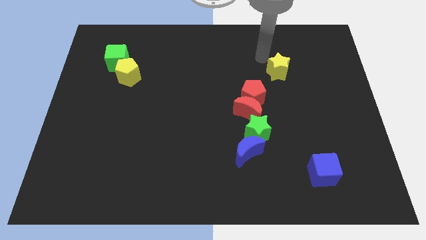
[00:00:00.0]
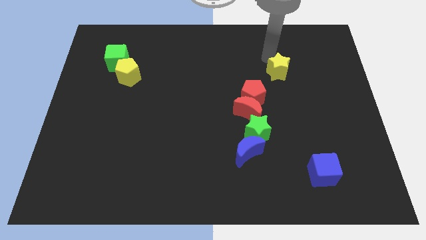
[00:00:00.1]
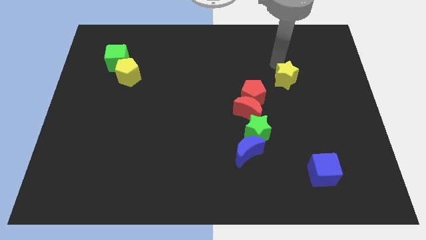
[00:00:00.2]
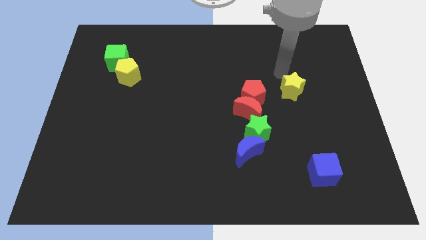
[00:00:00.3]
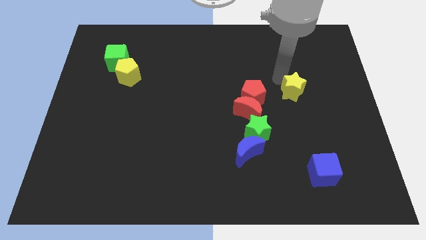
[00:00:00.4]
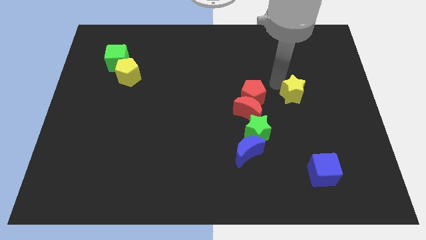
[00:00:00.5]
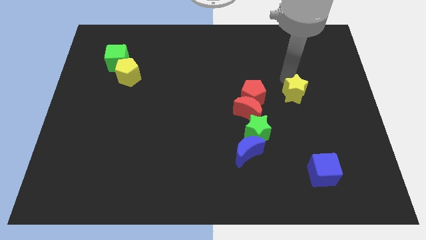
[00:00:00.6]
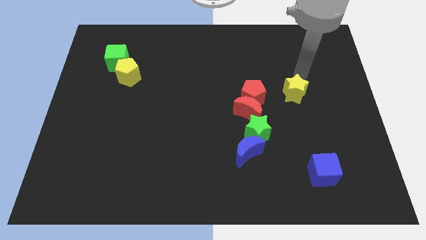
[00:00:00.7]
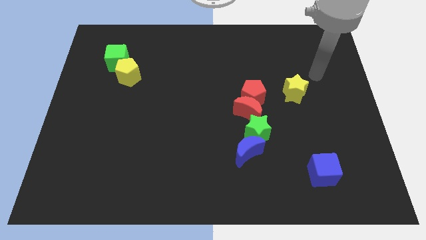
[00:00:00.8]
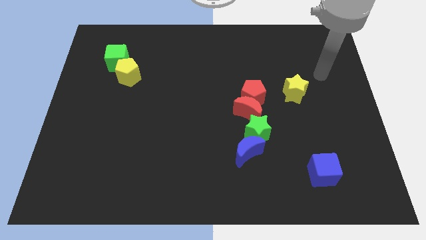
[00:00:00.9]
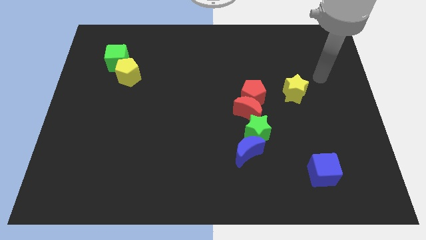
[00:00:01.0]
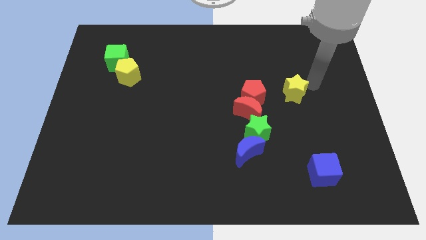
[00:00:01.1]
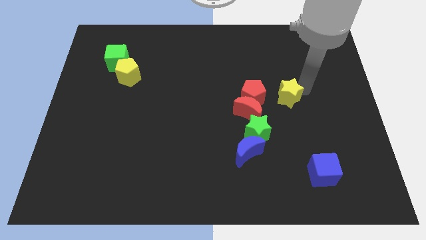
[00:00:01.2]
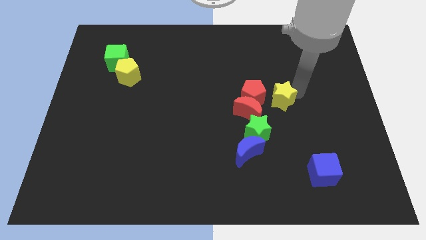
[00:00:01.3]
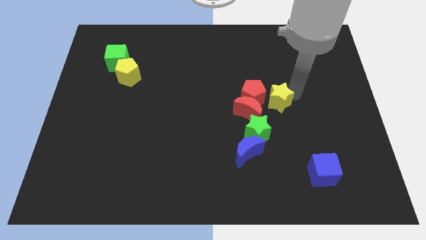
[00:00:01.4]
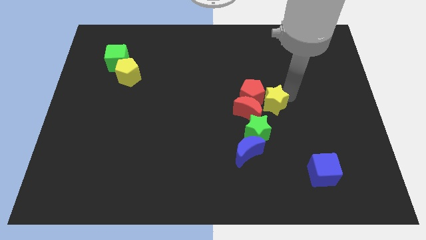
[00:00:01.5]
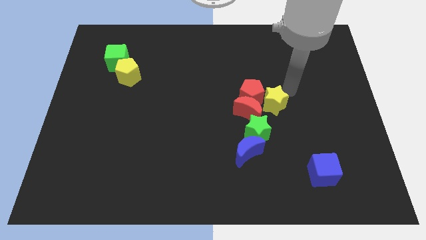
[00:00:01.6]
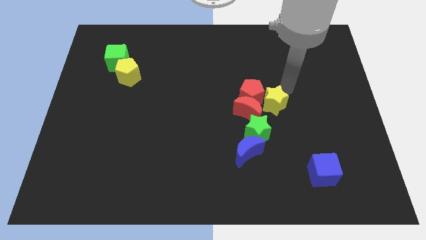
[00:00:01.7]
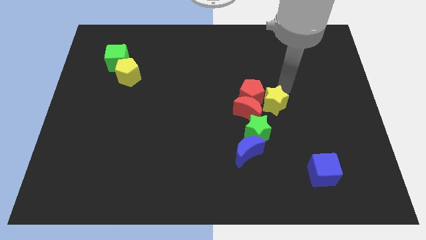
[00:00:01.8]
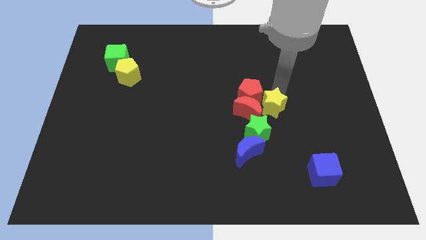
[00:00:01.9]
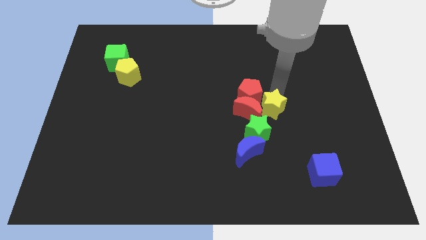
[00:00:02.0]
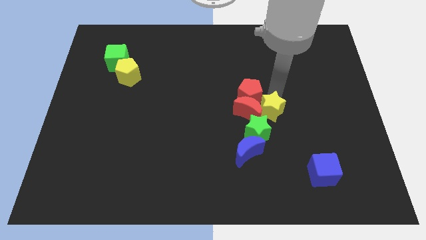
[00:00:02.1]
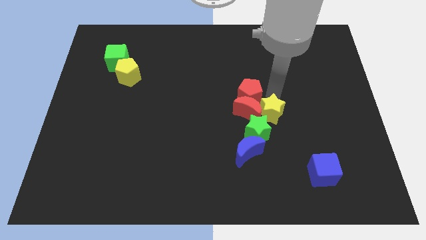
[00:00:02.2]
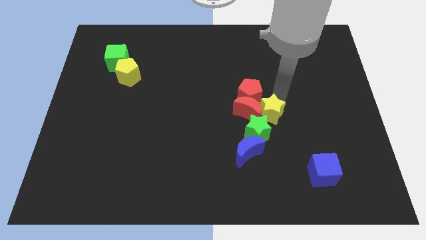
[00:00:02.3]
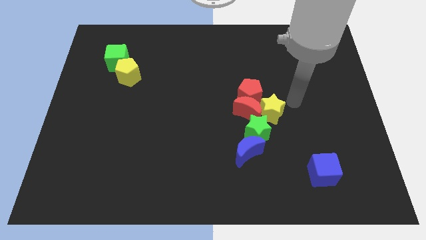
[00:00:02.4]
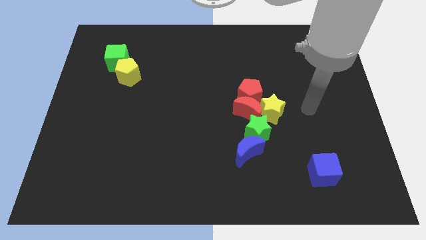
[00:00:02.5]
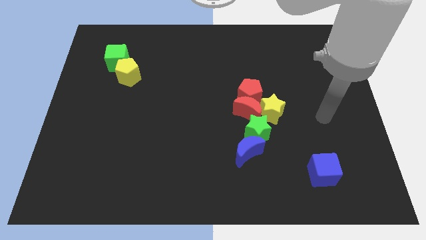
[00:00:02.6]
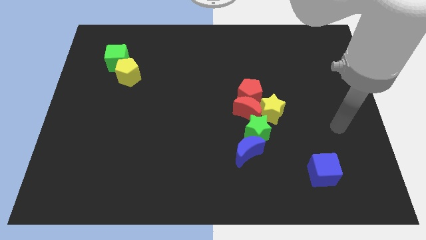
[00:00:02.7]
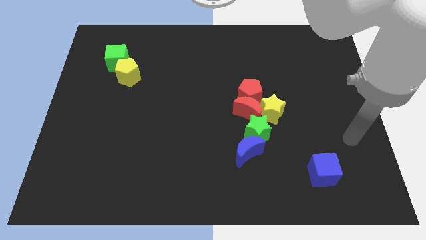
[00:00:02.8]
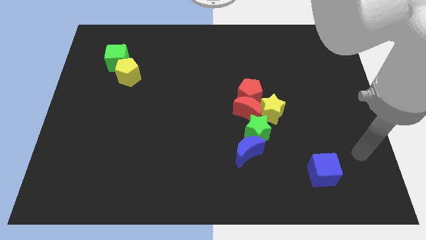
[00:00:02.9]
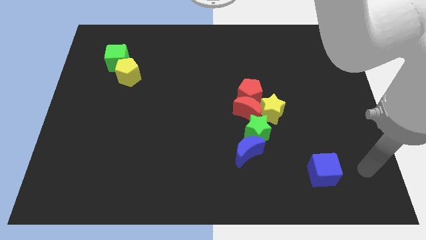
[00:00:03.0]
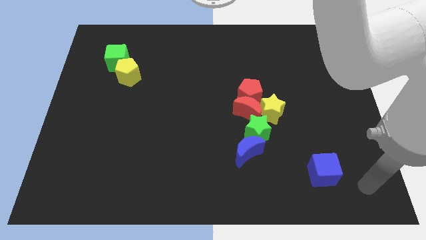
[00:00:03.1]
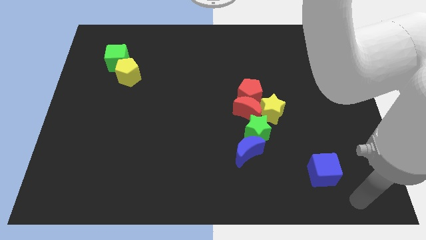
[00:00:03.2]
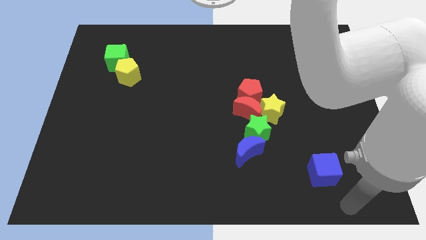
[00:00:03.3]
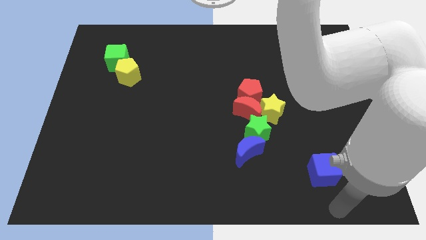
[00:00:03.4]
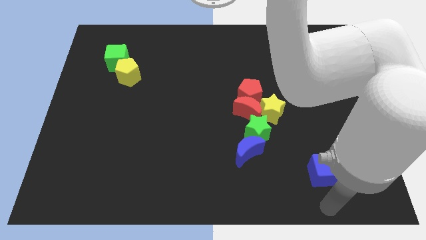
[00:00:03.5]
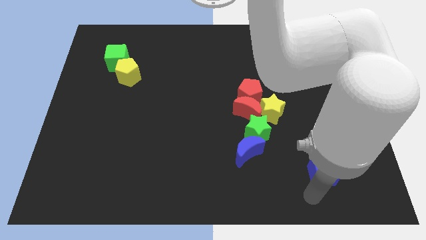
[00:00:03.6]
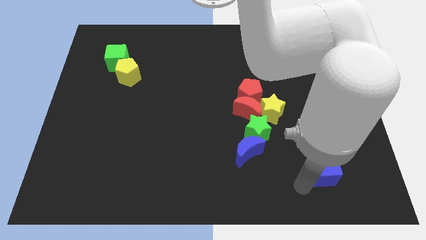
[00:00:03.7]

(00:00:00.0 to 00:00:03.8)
place the yellow star to the right of the red crescent

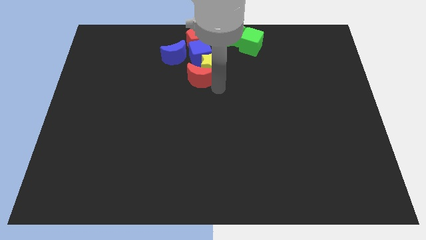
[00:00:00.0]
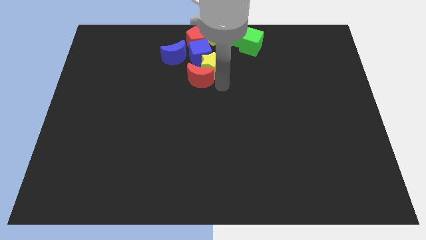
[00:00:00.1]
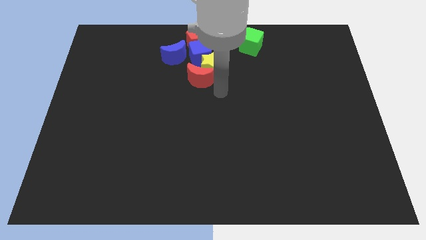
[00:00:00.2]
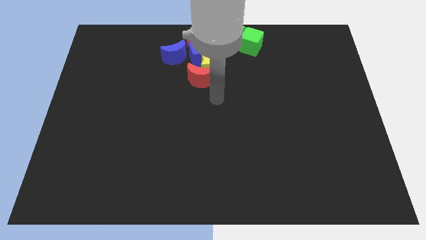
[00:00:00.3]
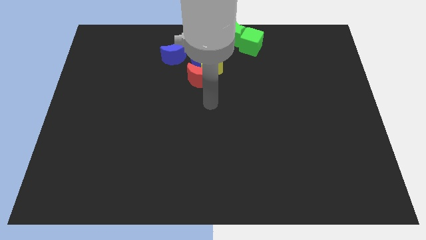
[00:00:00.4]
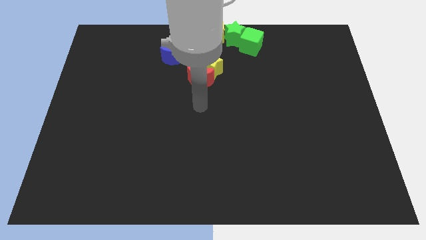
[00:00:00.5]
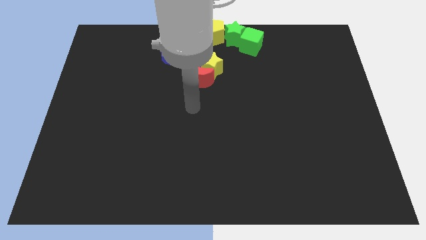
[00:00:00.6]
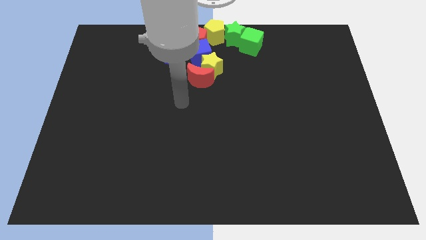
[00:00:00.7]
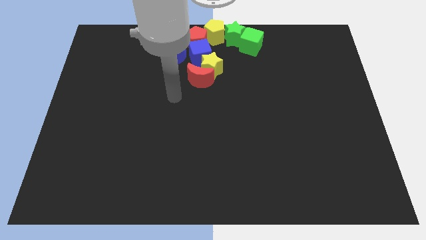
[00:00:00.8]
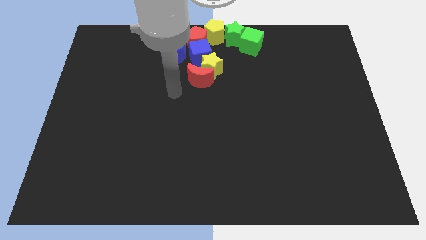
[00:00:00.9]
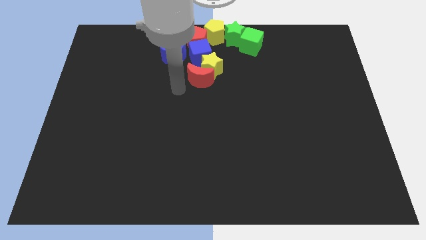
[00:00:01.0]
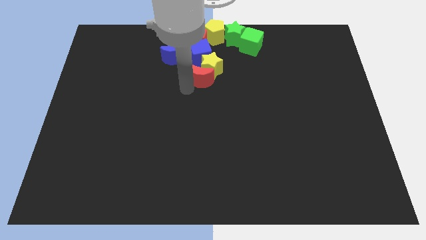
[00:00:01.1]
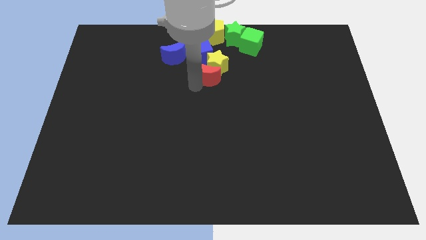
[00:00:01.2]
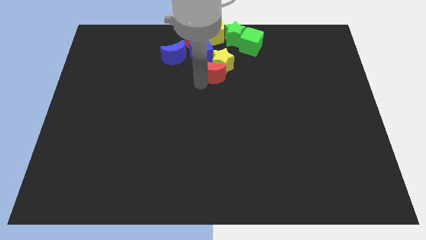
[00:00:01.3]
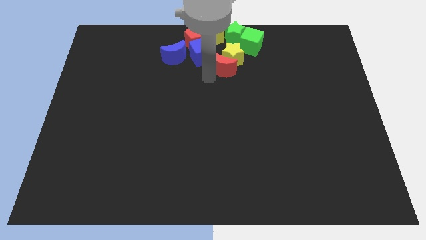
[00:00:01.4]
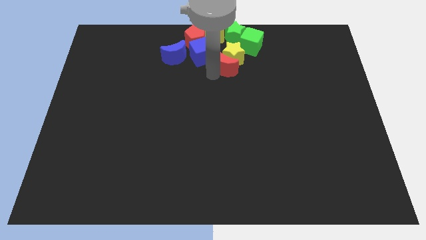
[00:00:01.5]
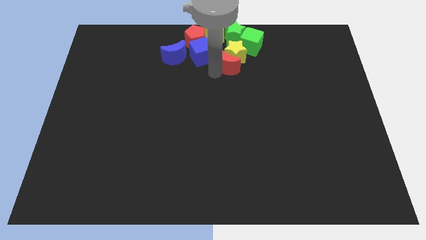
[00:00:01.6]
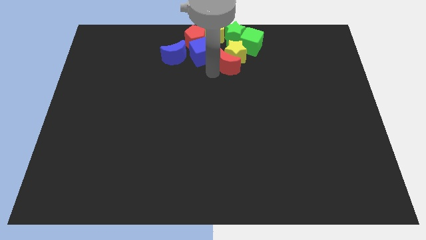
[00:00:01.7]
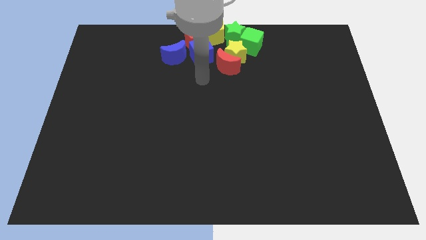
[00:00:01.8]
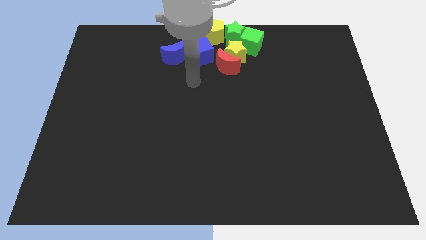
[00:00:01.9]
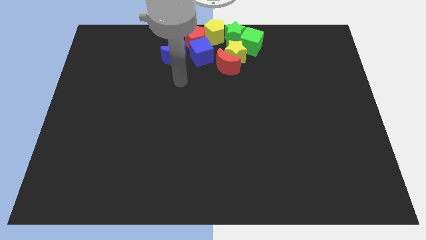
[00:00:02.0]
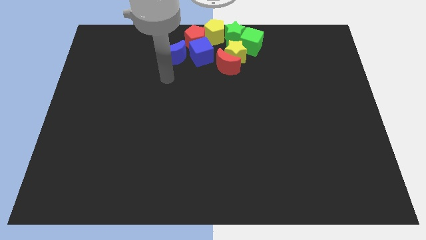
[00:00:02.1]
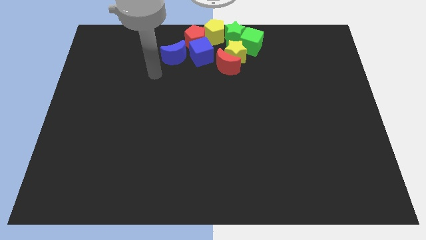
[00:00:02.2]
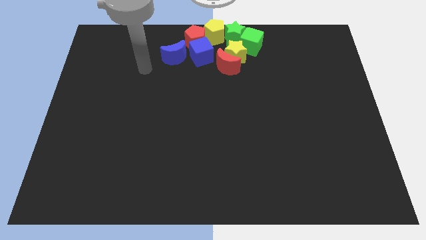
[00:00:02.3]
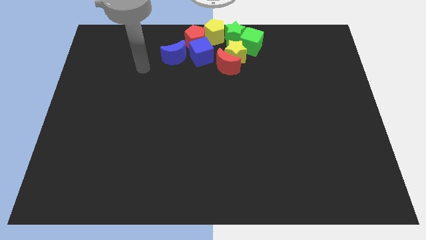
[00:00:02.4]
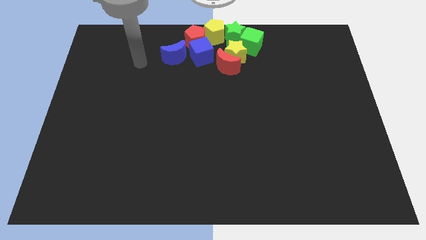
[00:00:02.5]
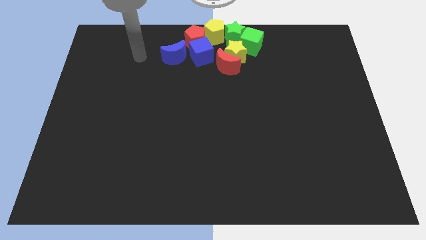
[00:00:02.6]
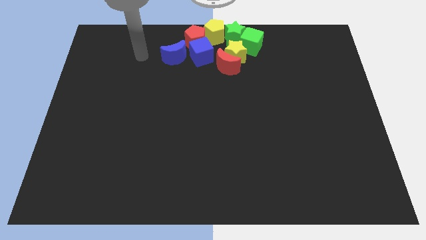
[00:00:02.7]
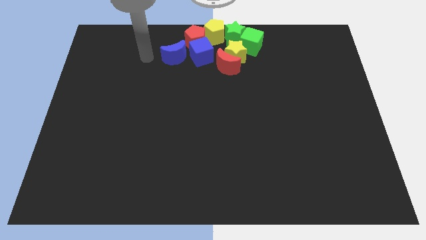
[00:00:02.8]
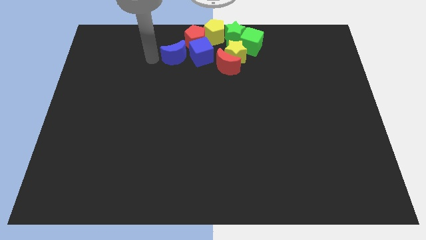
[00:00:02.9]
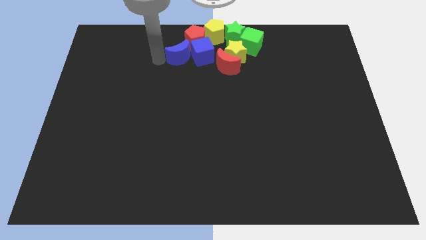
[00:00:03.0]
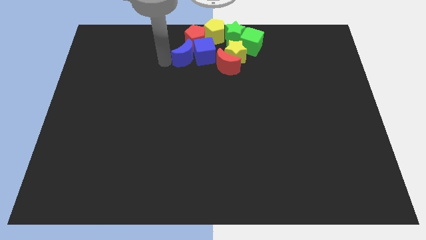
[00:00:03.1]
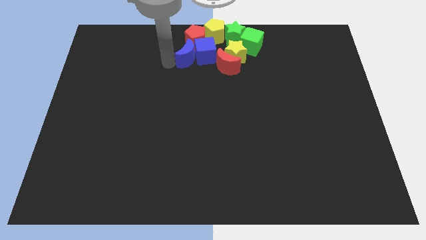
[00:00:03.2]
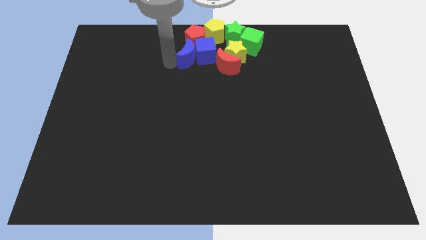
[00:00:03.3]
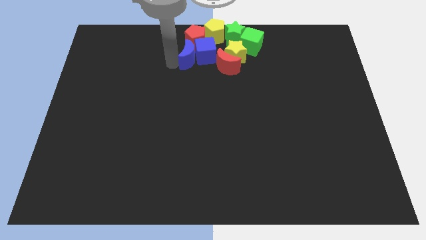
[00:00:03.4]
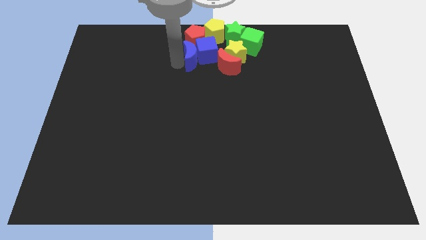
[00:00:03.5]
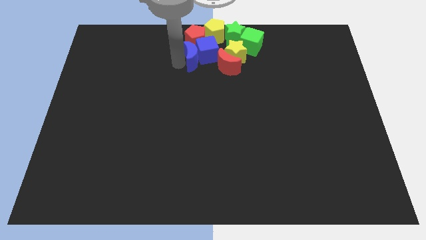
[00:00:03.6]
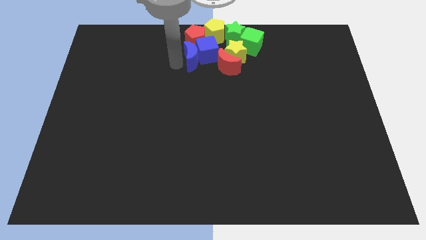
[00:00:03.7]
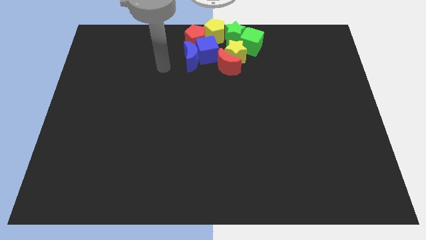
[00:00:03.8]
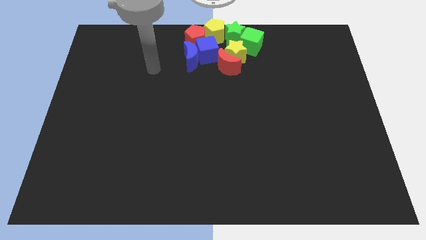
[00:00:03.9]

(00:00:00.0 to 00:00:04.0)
adjust the group of blocks at the top center of the board

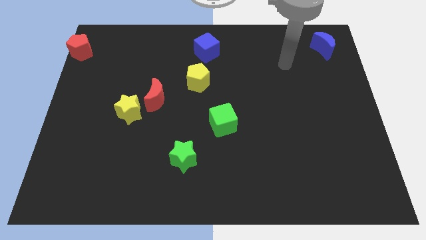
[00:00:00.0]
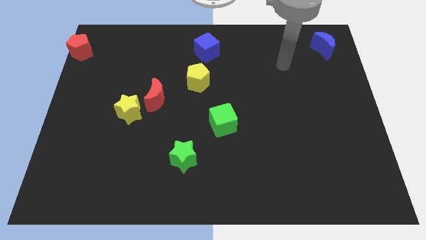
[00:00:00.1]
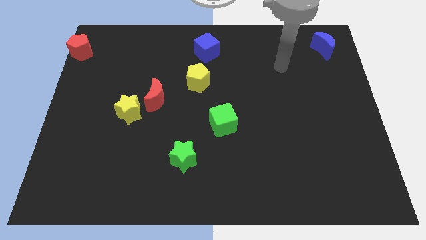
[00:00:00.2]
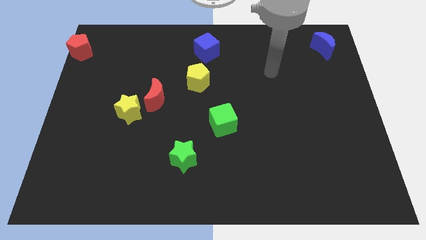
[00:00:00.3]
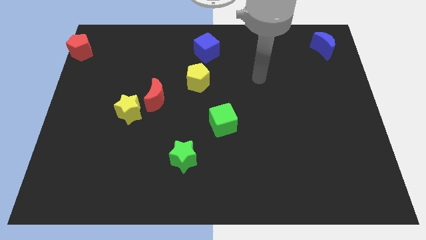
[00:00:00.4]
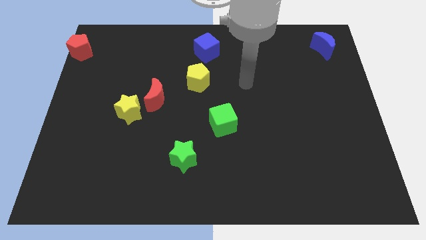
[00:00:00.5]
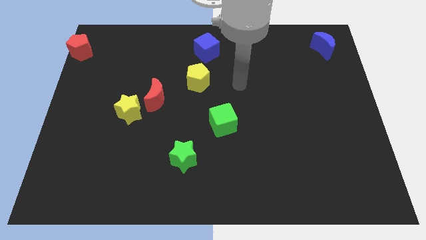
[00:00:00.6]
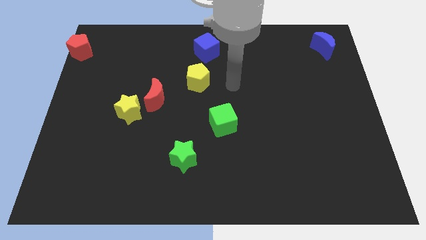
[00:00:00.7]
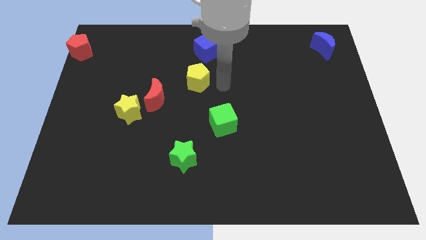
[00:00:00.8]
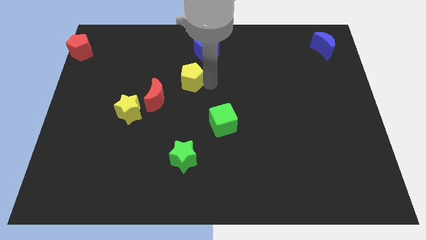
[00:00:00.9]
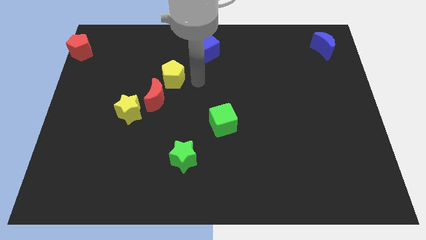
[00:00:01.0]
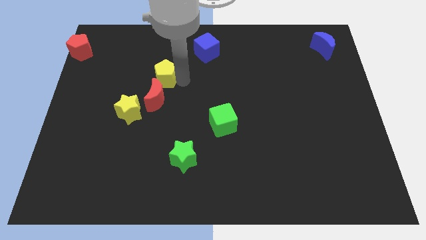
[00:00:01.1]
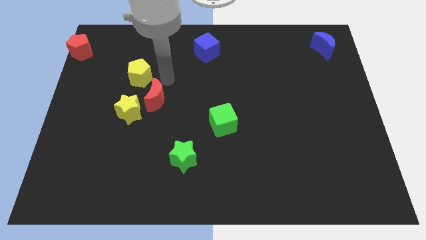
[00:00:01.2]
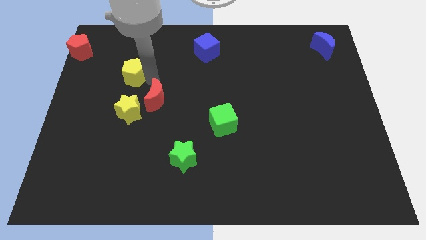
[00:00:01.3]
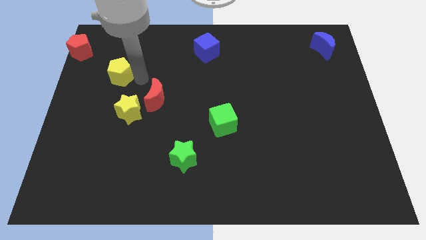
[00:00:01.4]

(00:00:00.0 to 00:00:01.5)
push the yellow pentagon to the top of the yellow star
